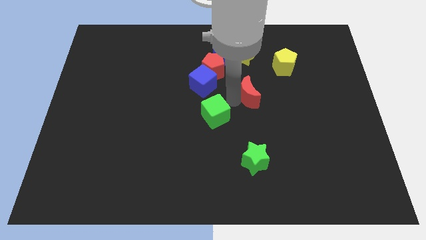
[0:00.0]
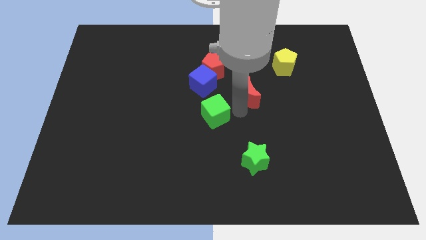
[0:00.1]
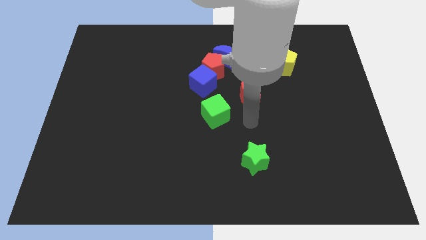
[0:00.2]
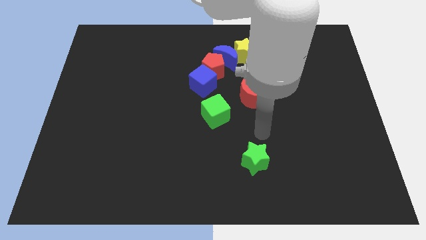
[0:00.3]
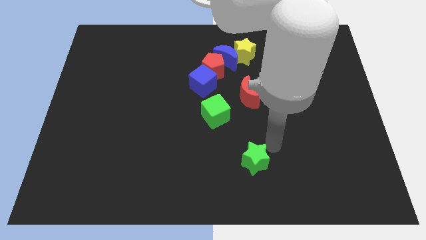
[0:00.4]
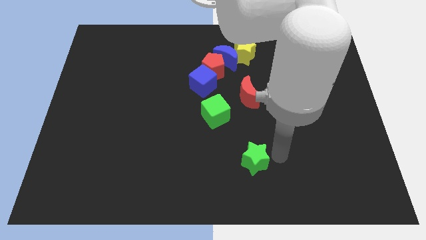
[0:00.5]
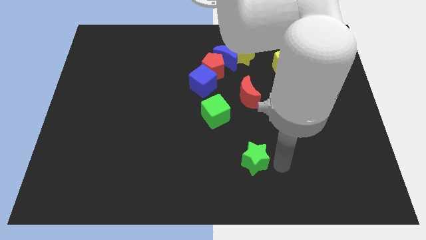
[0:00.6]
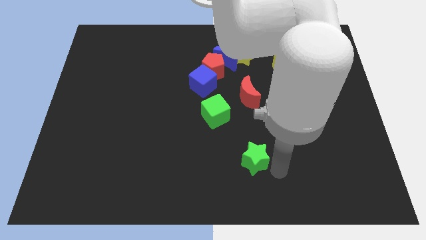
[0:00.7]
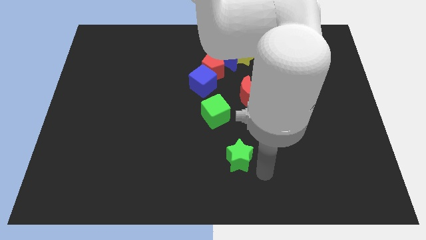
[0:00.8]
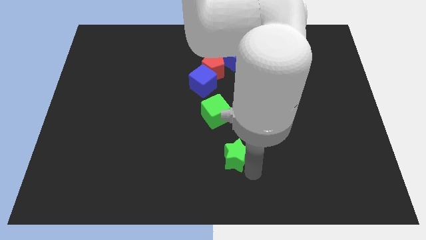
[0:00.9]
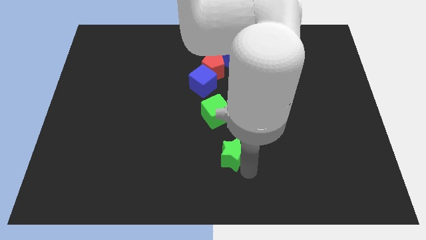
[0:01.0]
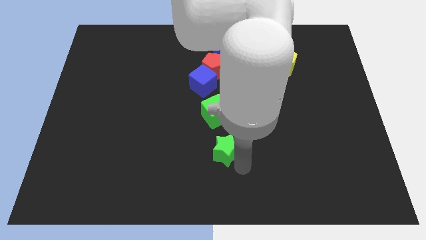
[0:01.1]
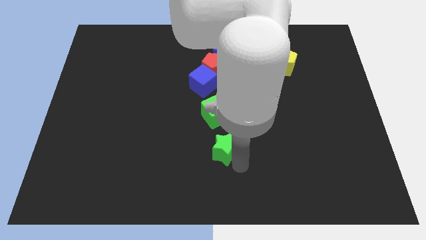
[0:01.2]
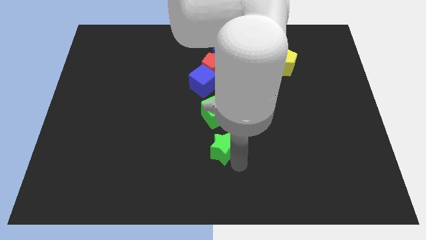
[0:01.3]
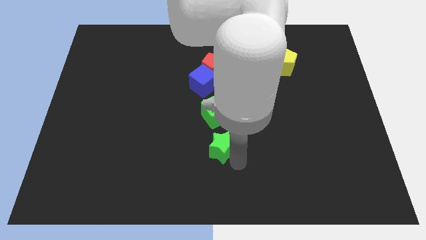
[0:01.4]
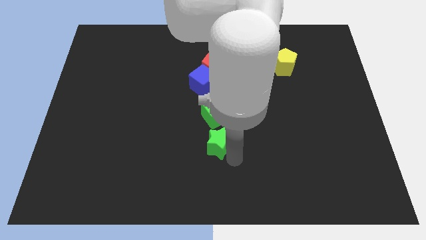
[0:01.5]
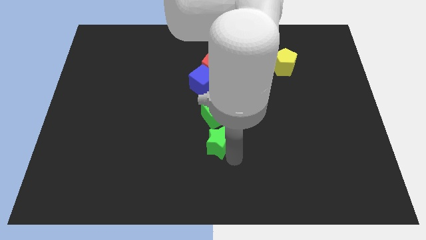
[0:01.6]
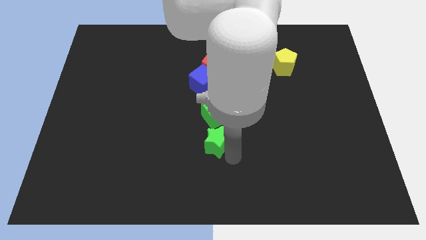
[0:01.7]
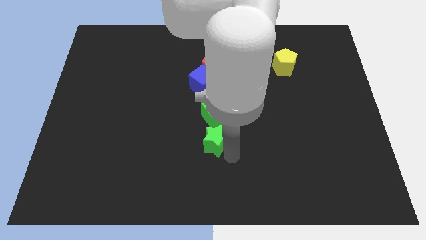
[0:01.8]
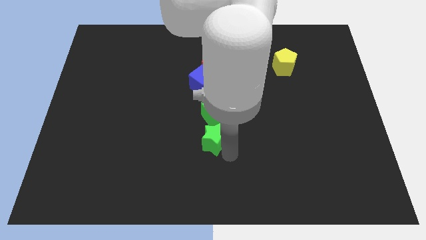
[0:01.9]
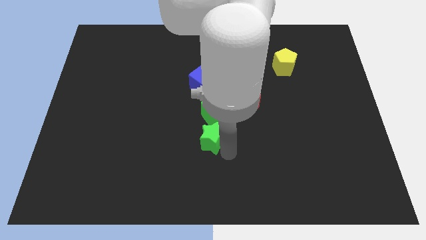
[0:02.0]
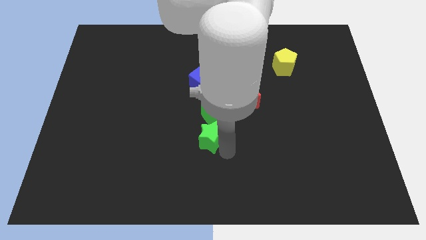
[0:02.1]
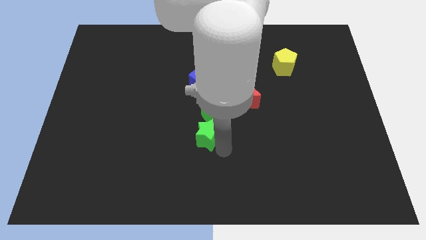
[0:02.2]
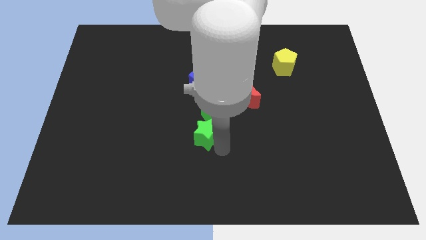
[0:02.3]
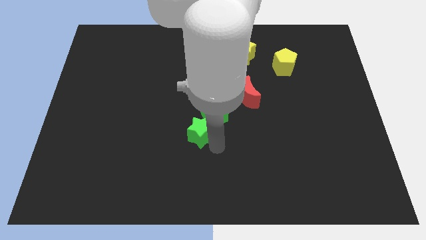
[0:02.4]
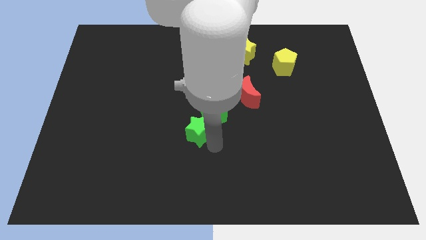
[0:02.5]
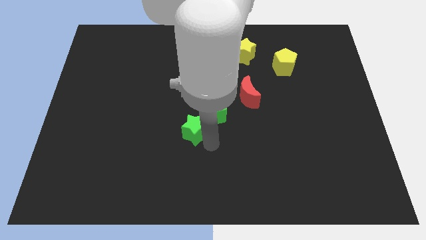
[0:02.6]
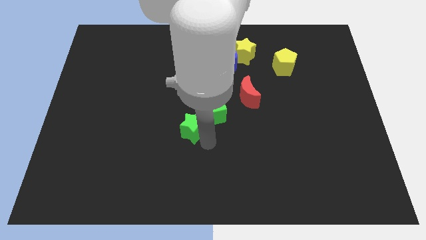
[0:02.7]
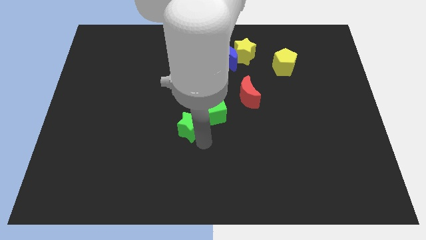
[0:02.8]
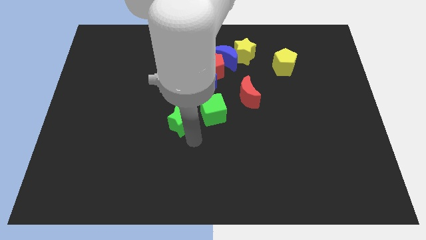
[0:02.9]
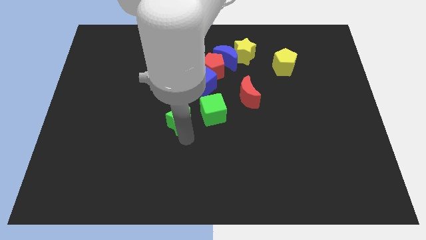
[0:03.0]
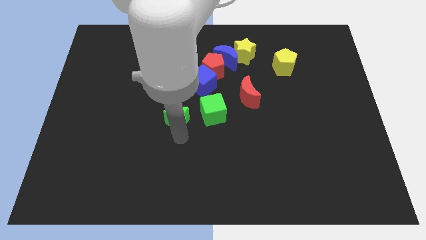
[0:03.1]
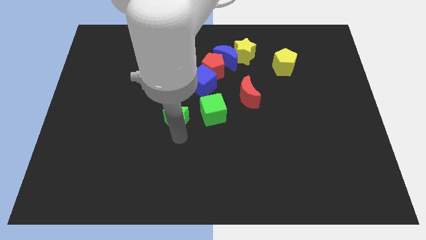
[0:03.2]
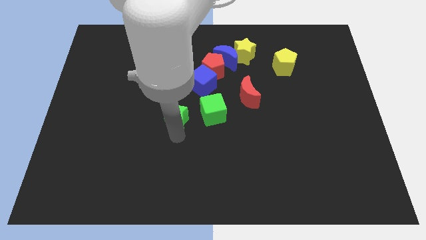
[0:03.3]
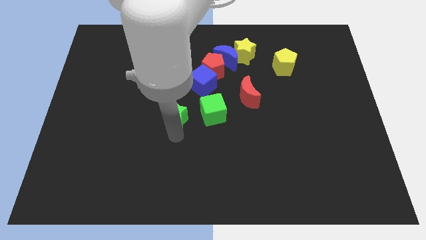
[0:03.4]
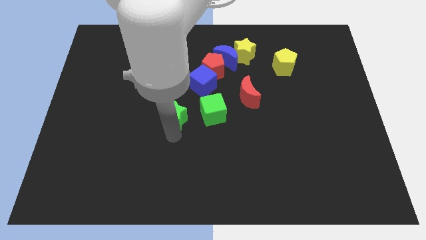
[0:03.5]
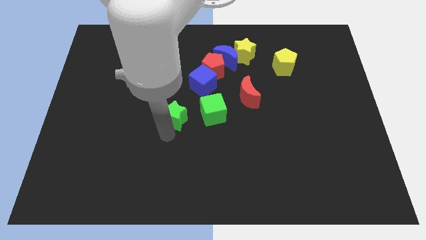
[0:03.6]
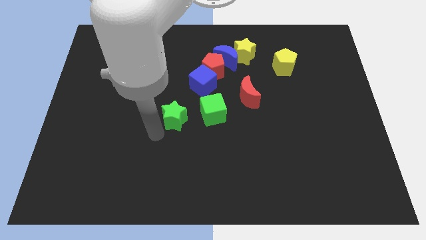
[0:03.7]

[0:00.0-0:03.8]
place green star to the left of green cube

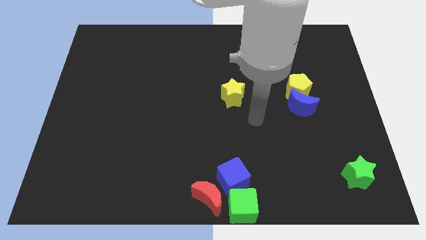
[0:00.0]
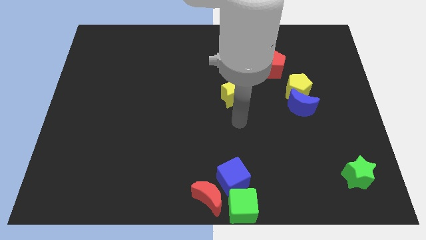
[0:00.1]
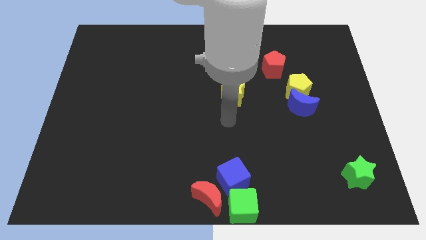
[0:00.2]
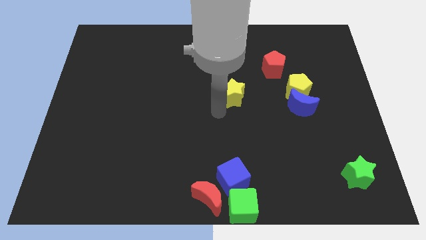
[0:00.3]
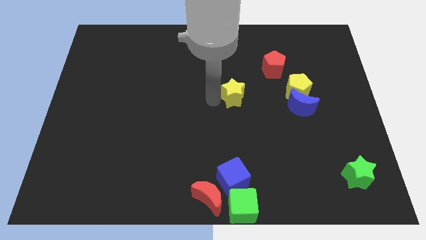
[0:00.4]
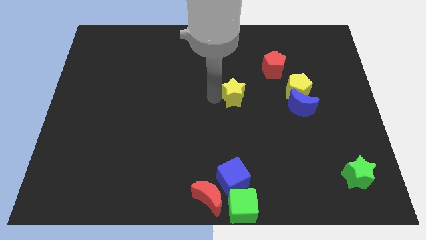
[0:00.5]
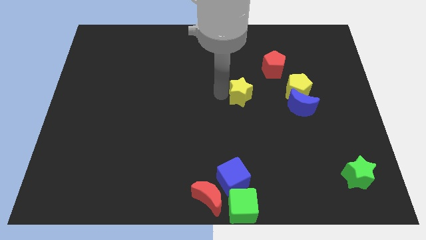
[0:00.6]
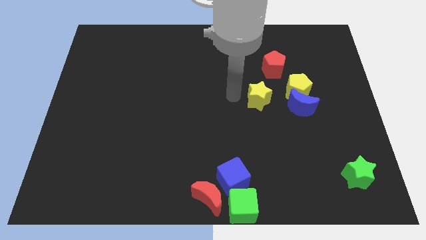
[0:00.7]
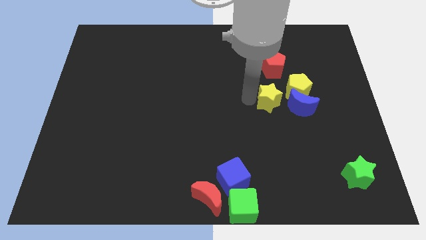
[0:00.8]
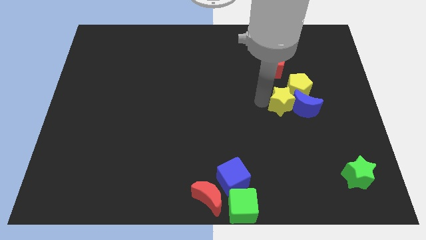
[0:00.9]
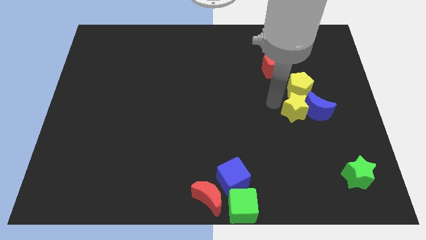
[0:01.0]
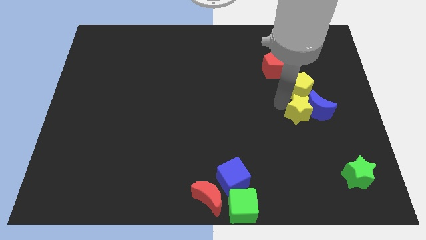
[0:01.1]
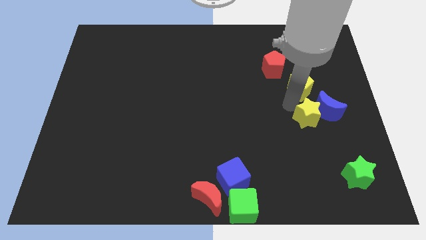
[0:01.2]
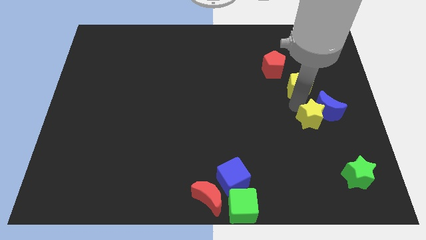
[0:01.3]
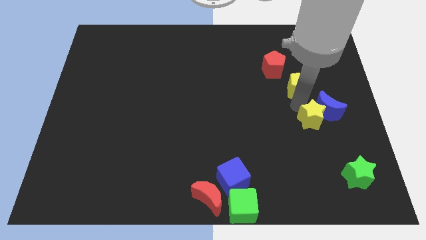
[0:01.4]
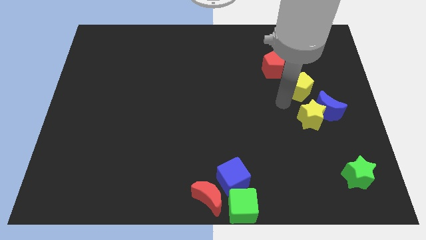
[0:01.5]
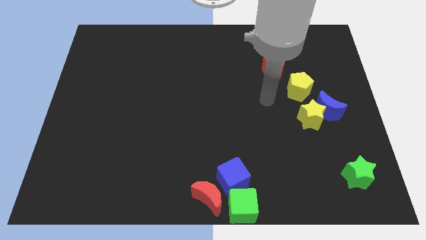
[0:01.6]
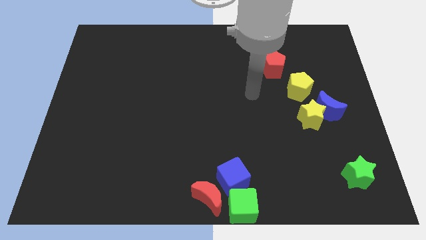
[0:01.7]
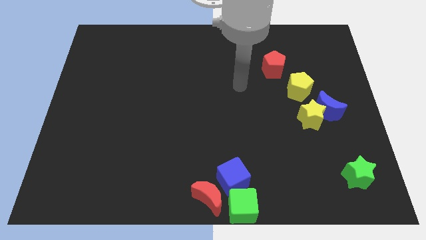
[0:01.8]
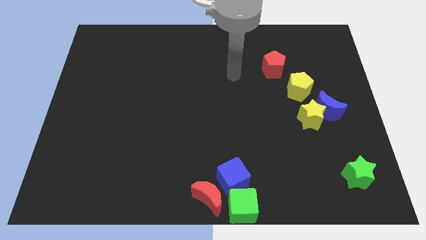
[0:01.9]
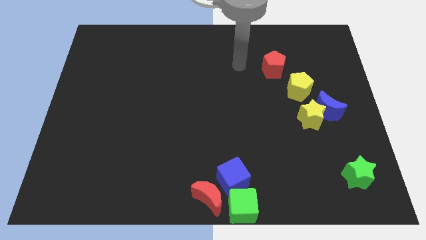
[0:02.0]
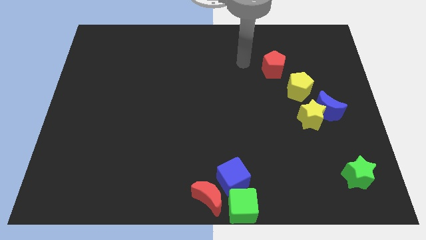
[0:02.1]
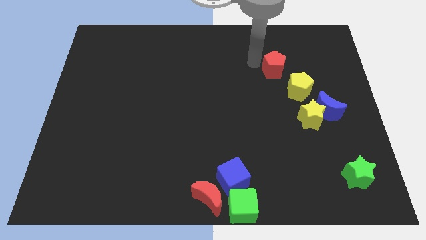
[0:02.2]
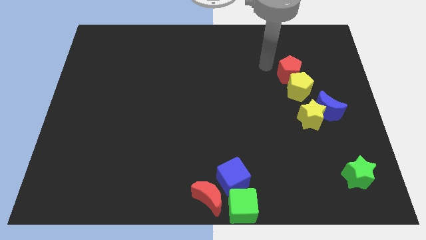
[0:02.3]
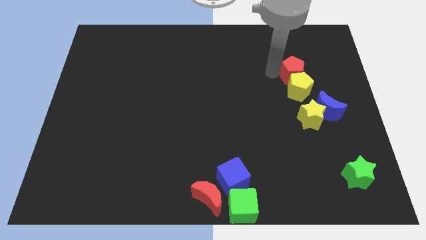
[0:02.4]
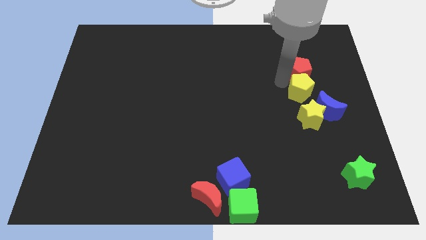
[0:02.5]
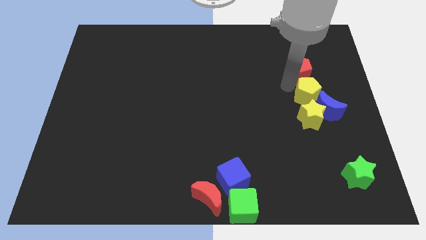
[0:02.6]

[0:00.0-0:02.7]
move the yellow star into the blue crescent

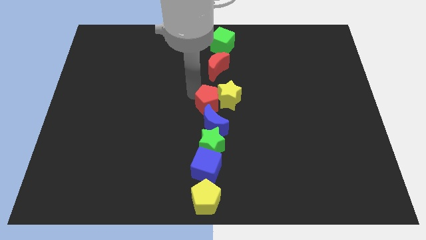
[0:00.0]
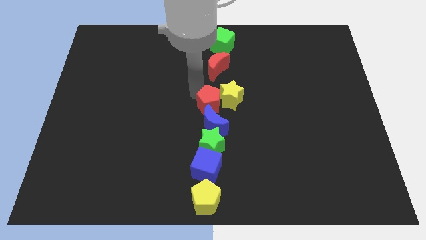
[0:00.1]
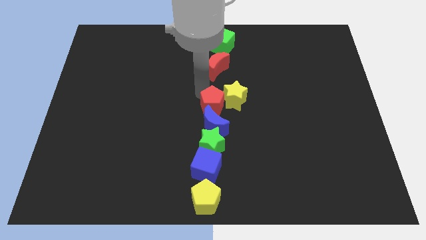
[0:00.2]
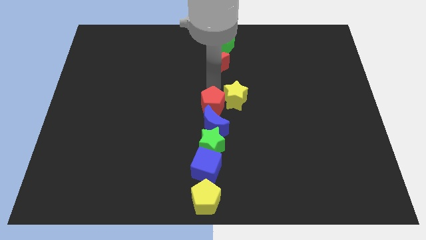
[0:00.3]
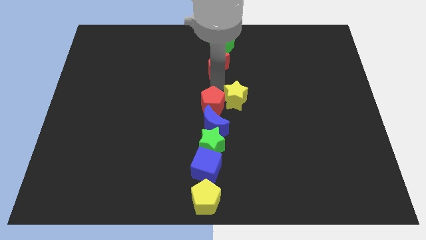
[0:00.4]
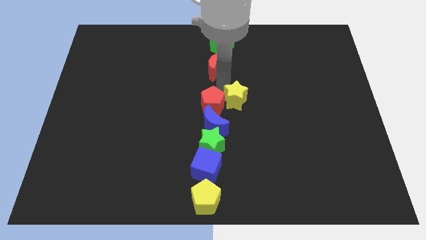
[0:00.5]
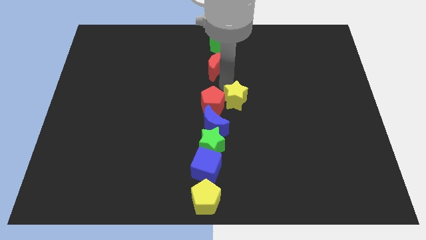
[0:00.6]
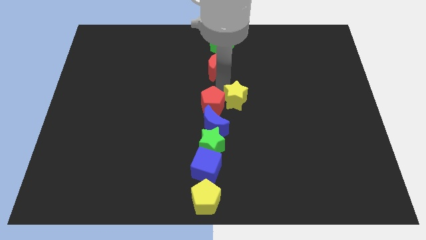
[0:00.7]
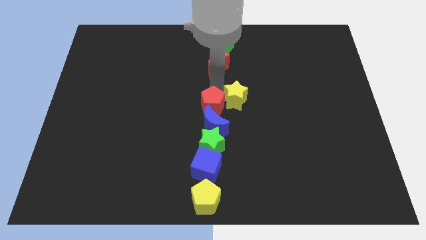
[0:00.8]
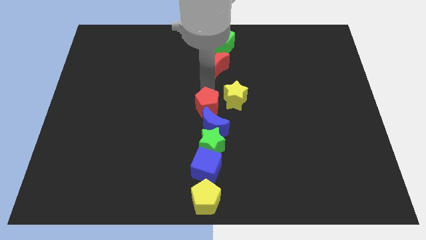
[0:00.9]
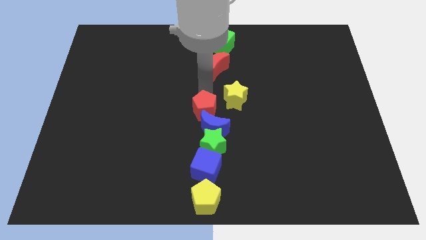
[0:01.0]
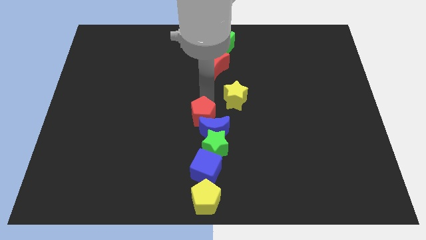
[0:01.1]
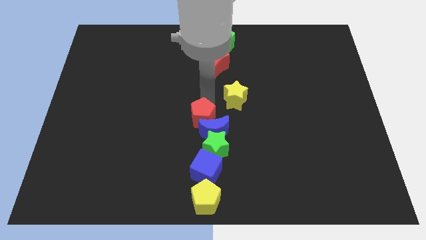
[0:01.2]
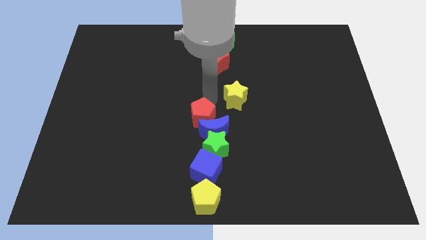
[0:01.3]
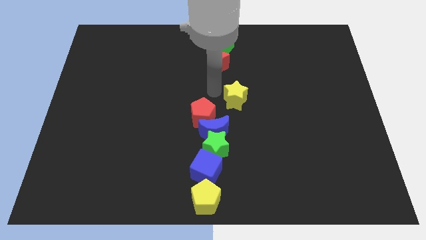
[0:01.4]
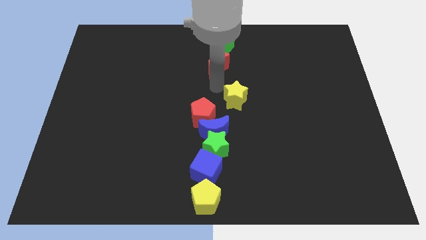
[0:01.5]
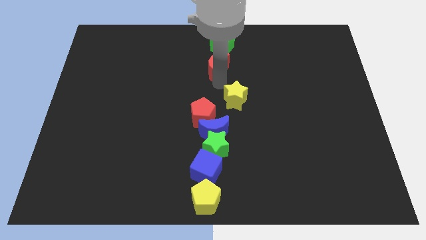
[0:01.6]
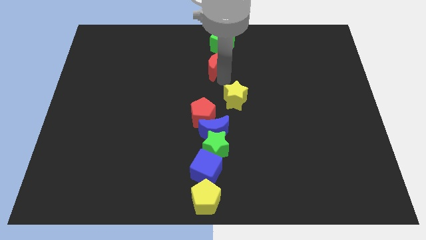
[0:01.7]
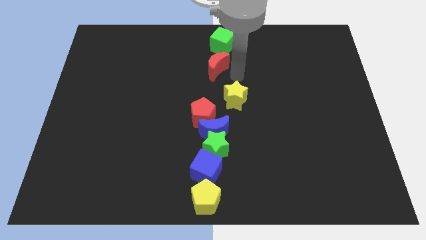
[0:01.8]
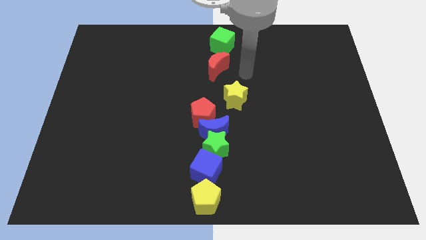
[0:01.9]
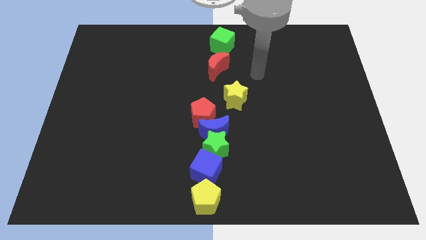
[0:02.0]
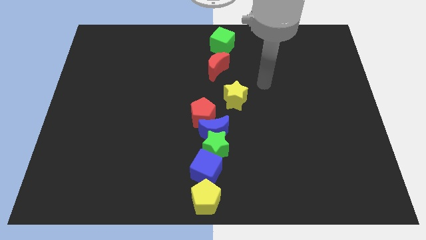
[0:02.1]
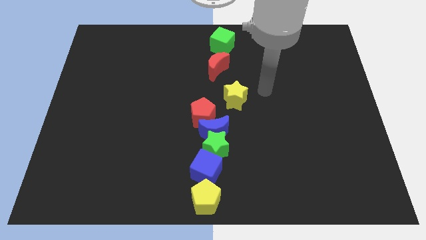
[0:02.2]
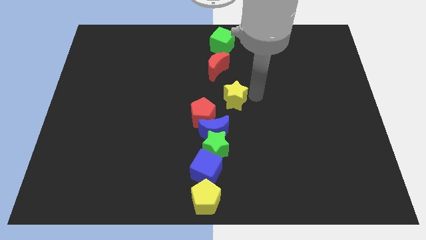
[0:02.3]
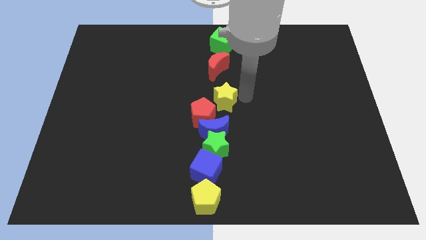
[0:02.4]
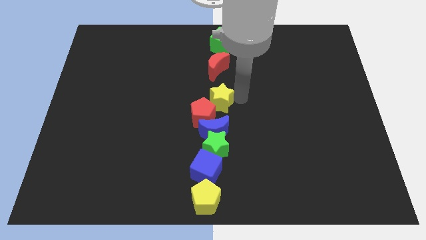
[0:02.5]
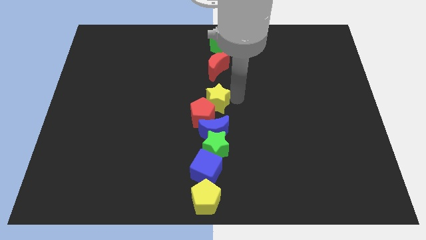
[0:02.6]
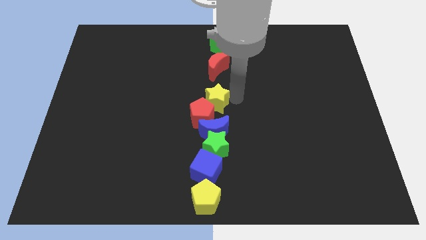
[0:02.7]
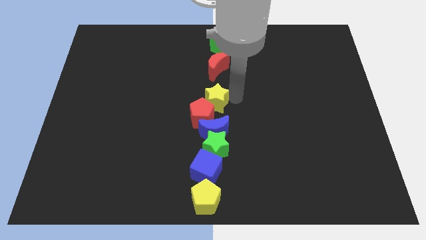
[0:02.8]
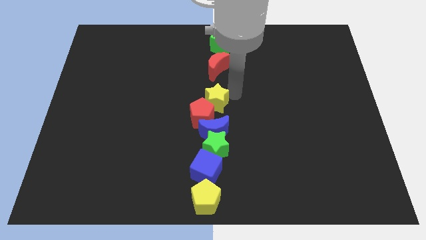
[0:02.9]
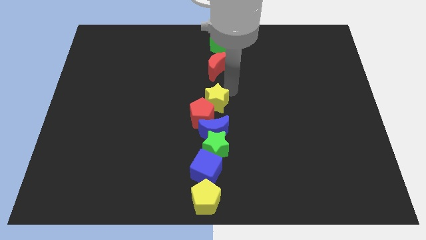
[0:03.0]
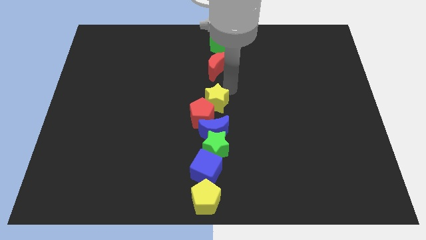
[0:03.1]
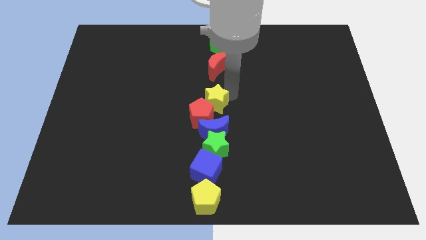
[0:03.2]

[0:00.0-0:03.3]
move yellow star into red pentagon
